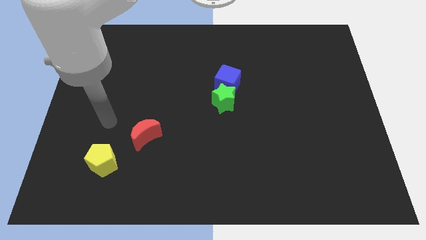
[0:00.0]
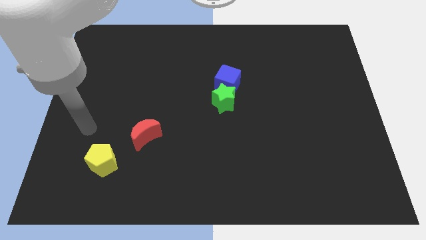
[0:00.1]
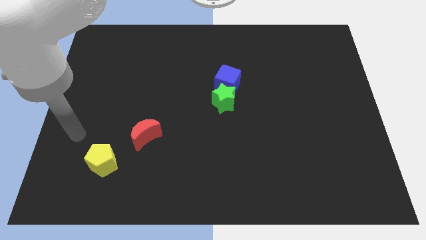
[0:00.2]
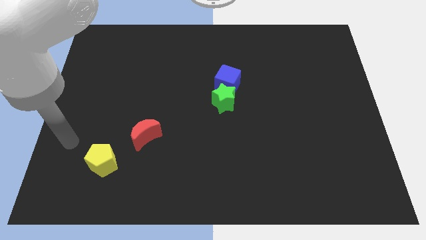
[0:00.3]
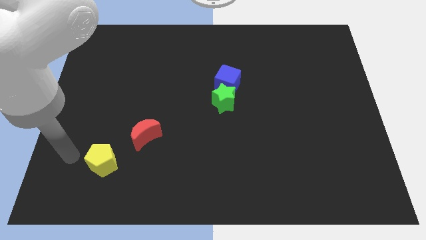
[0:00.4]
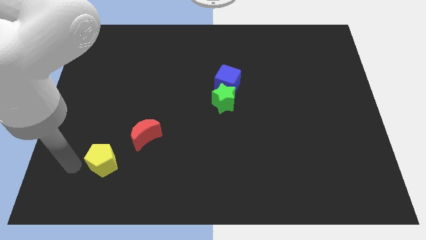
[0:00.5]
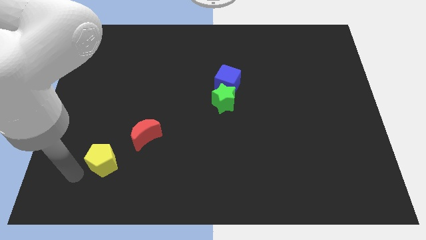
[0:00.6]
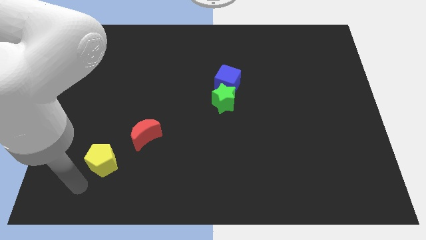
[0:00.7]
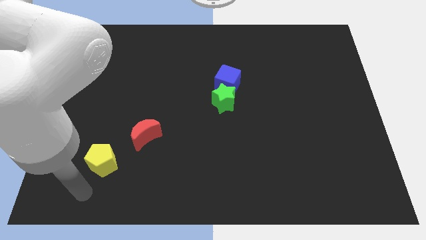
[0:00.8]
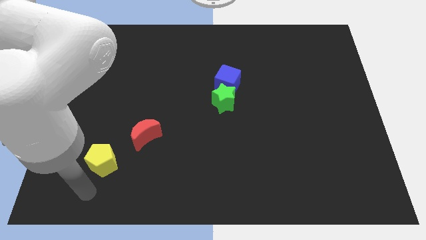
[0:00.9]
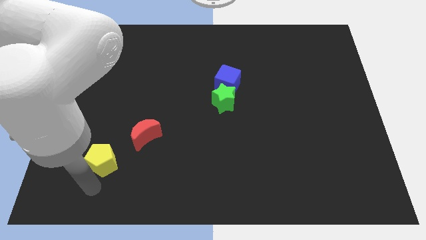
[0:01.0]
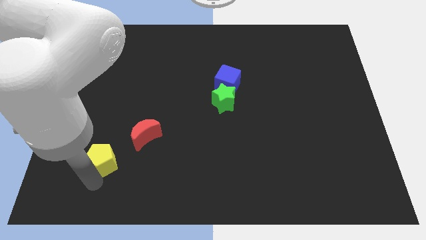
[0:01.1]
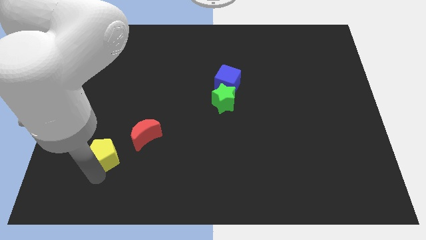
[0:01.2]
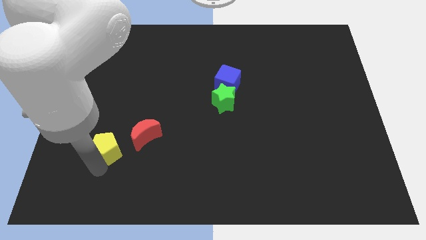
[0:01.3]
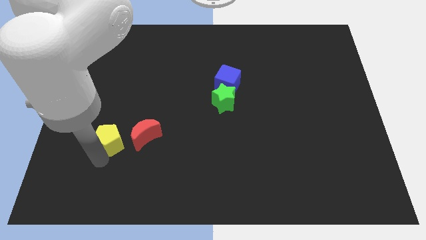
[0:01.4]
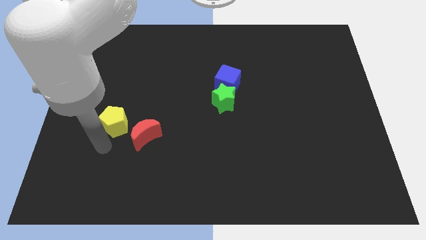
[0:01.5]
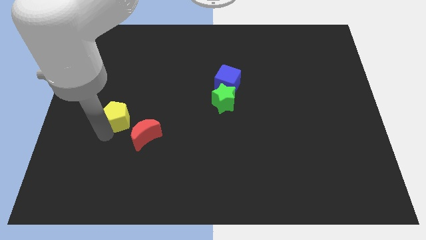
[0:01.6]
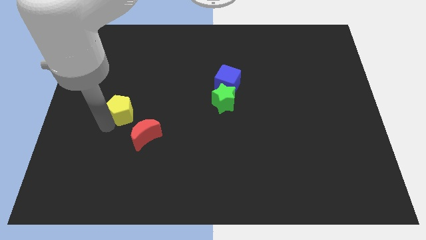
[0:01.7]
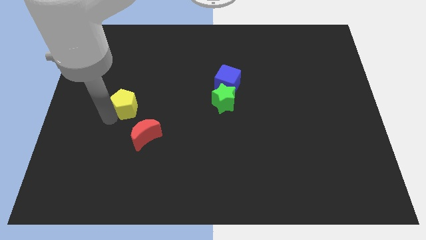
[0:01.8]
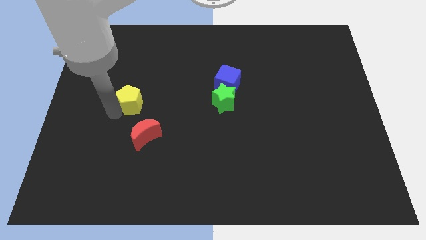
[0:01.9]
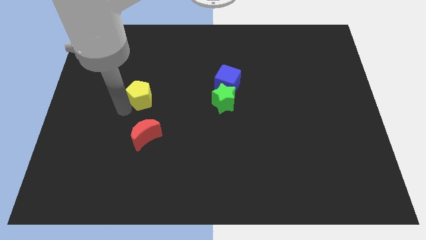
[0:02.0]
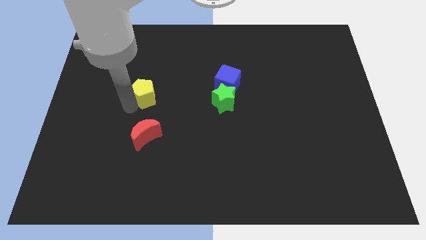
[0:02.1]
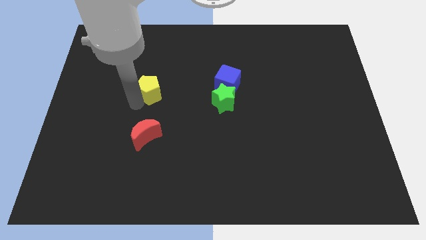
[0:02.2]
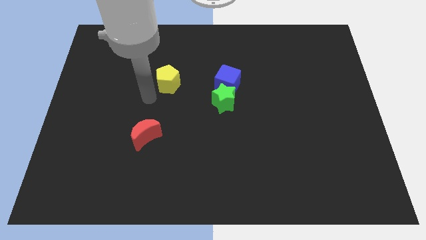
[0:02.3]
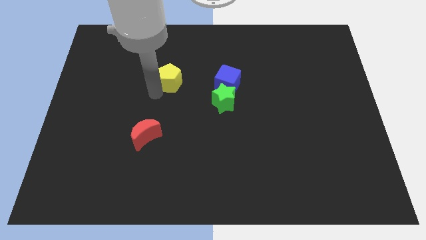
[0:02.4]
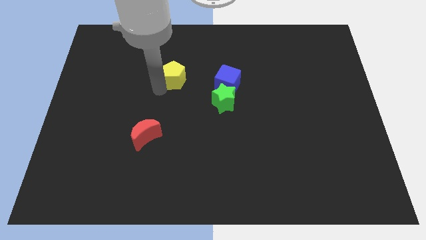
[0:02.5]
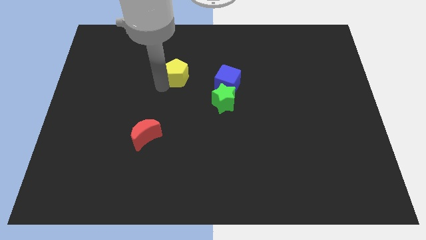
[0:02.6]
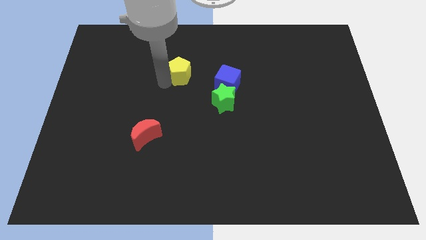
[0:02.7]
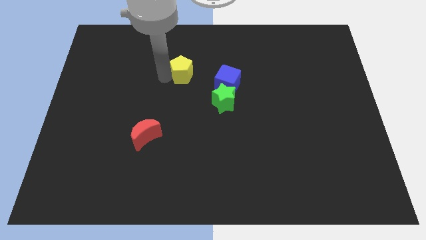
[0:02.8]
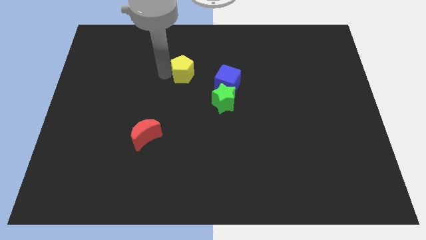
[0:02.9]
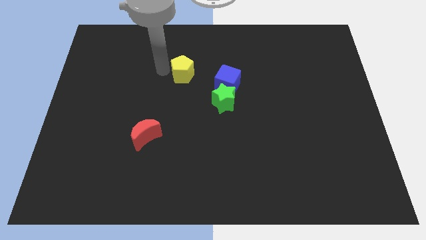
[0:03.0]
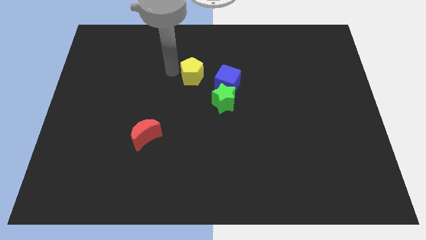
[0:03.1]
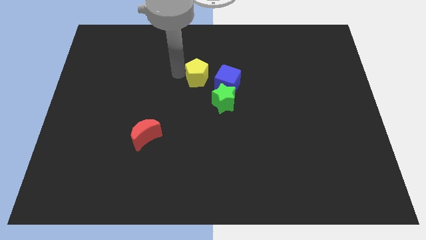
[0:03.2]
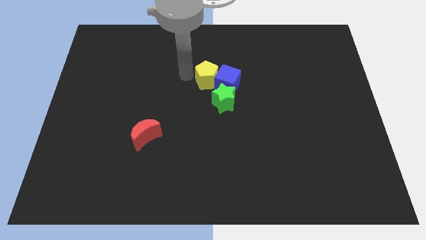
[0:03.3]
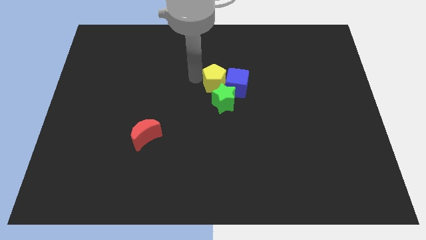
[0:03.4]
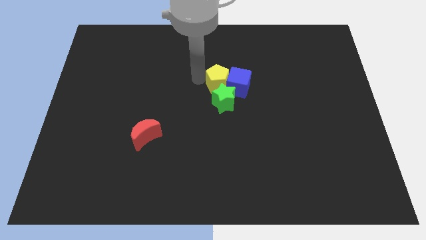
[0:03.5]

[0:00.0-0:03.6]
move the yellow pentagon towards the blue block

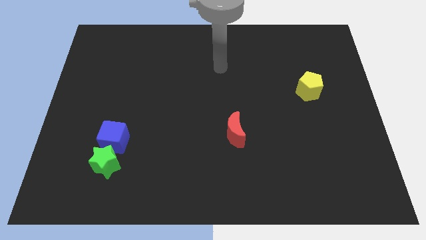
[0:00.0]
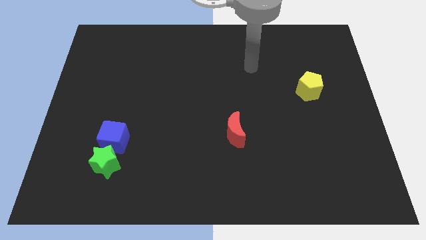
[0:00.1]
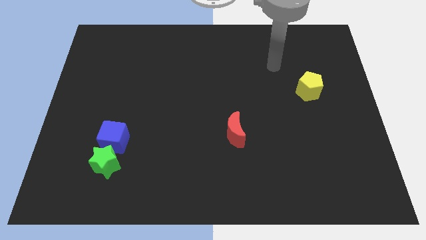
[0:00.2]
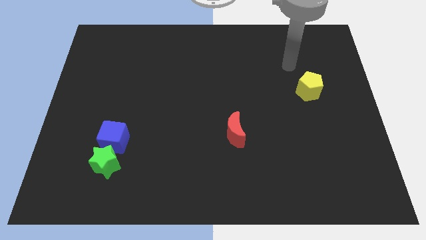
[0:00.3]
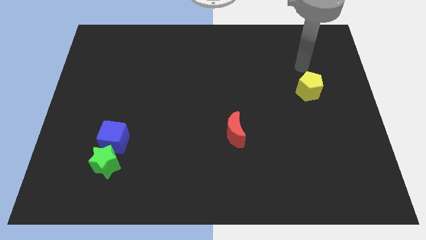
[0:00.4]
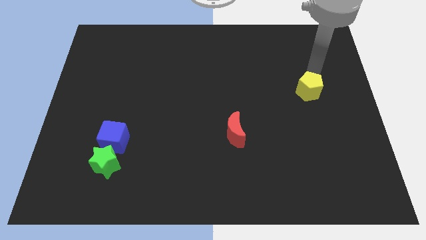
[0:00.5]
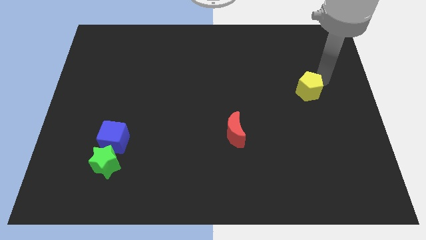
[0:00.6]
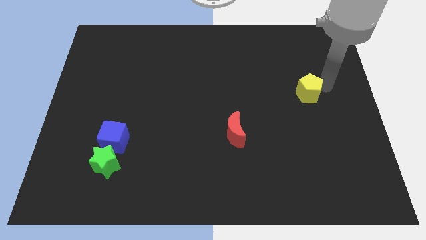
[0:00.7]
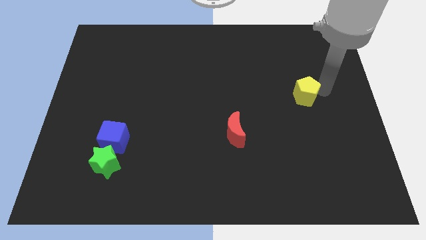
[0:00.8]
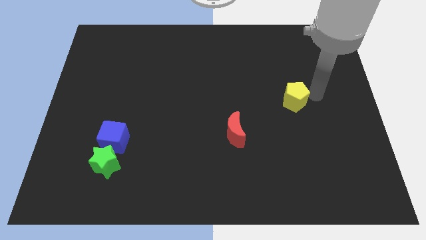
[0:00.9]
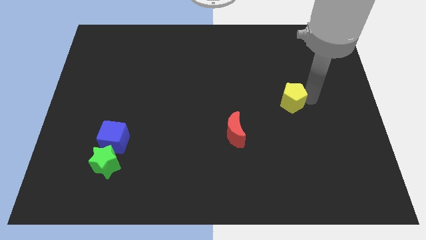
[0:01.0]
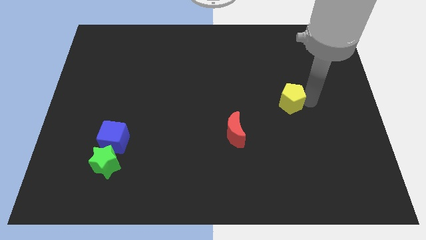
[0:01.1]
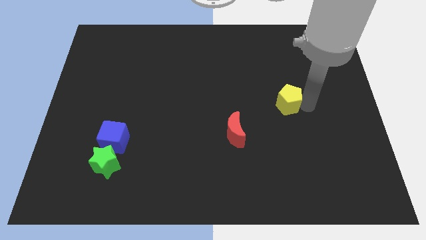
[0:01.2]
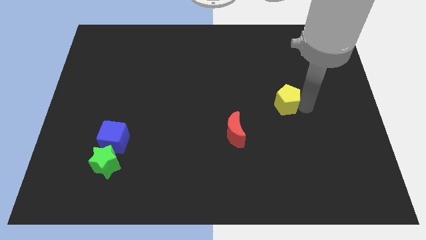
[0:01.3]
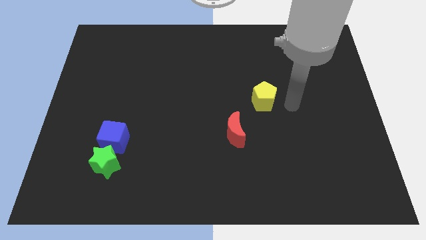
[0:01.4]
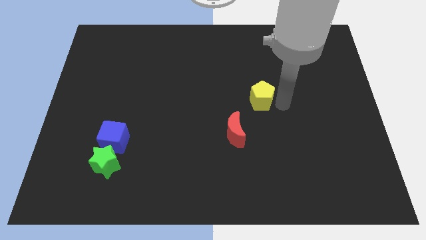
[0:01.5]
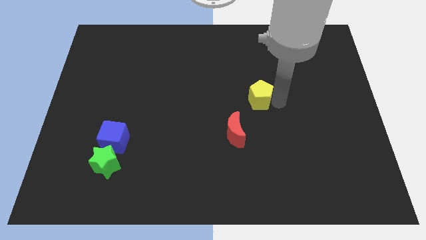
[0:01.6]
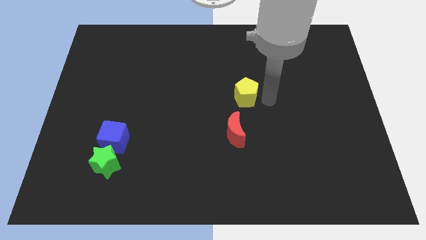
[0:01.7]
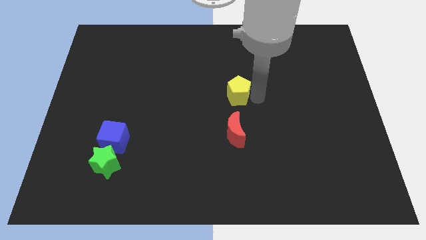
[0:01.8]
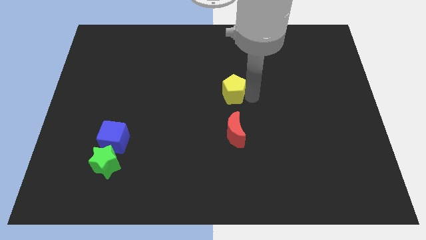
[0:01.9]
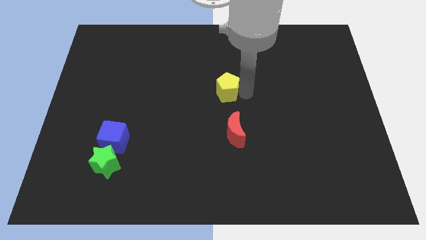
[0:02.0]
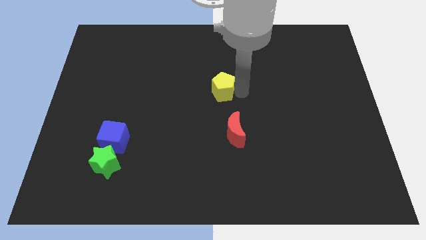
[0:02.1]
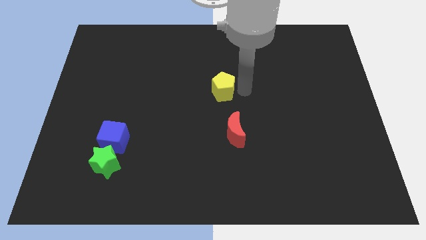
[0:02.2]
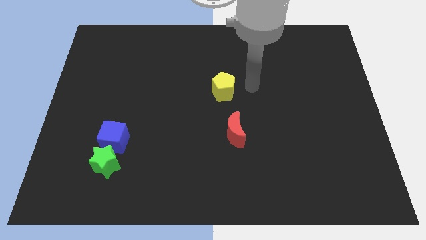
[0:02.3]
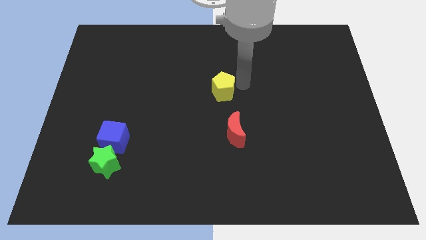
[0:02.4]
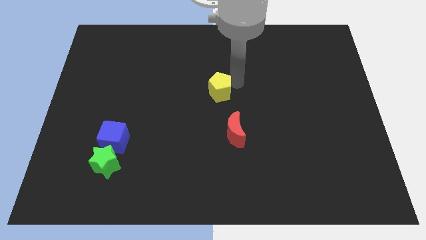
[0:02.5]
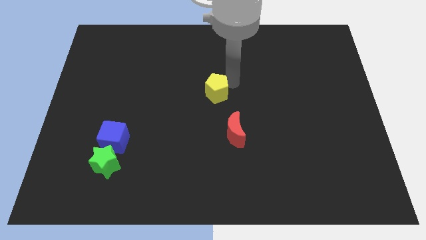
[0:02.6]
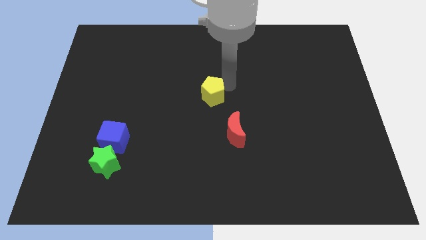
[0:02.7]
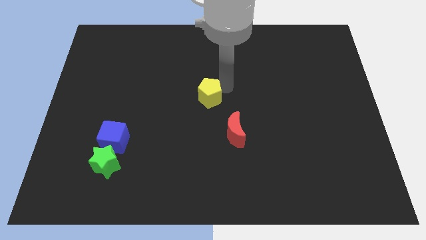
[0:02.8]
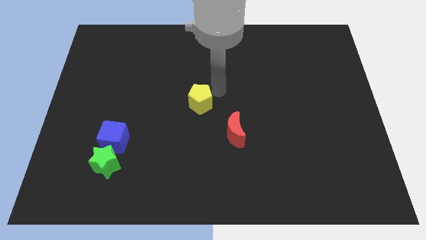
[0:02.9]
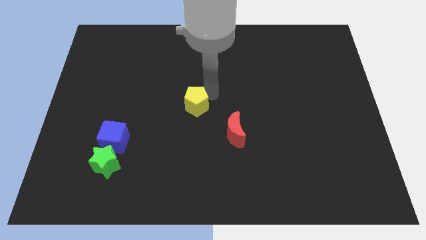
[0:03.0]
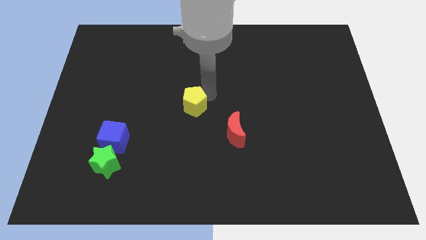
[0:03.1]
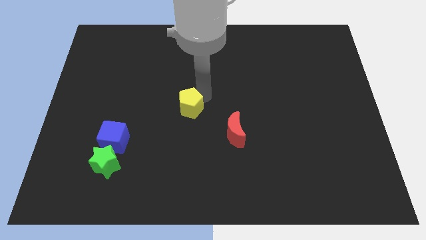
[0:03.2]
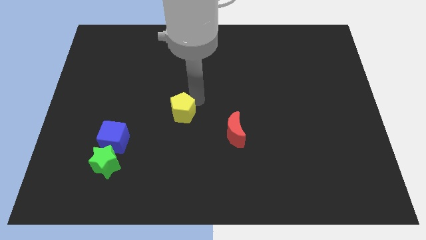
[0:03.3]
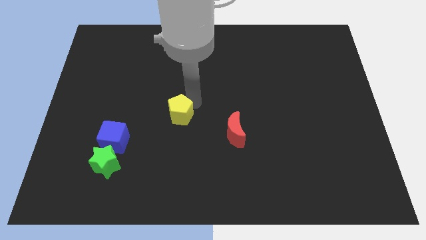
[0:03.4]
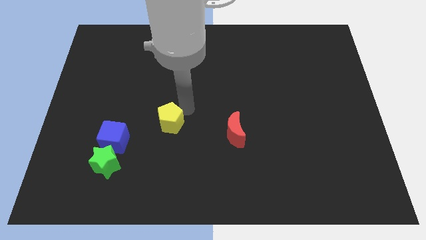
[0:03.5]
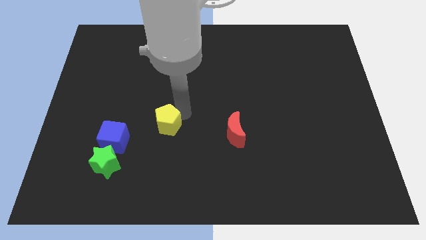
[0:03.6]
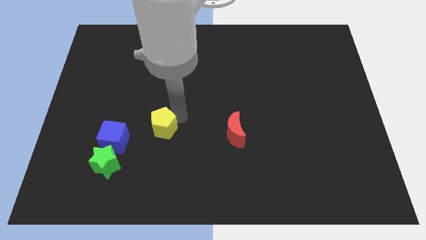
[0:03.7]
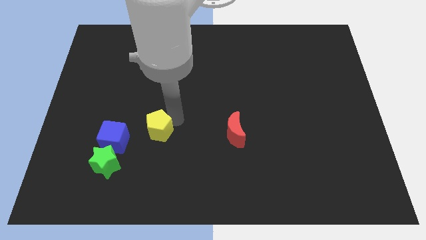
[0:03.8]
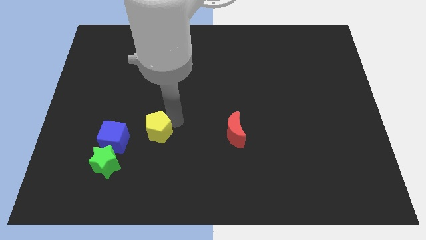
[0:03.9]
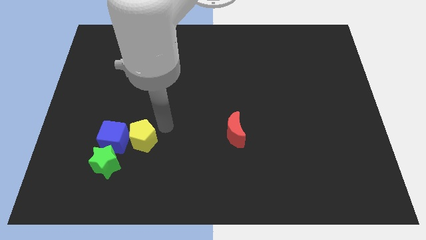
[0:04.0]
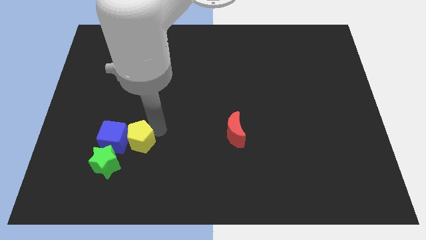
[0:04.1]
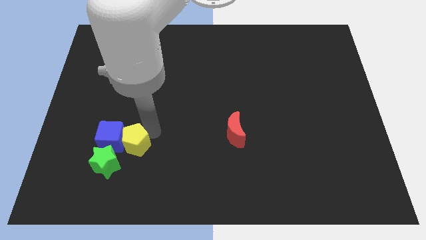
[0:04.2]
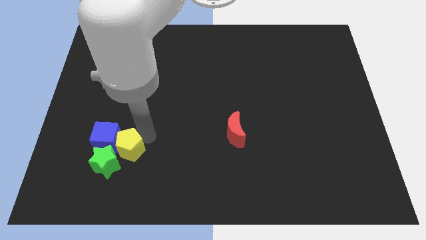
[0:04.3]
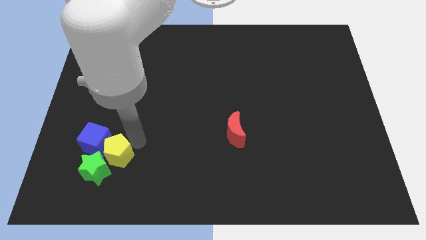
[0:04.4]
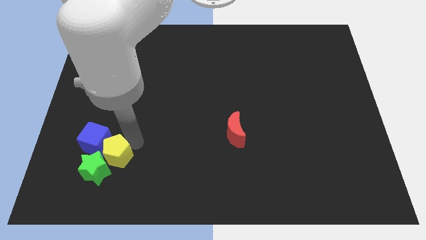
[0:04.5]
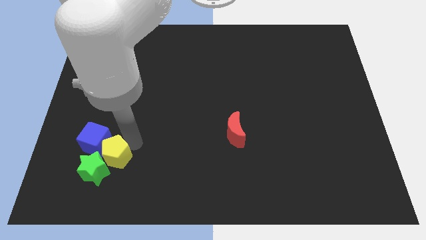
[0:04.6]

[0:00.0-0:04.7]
slide the pentagon close to the green block
